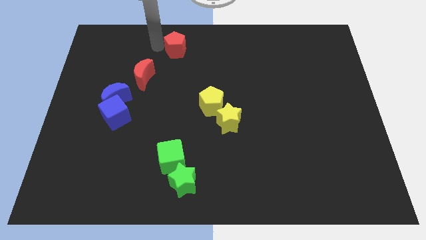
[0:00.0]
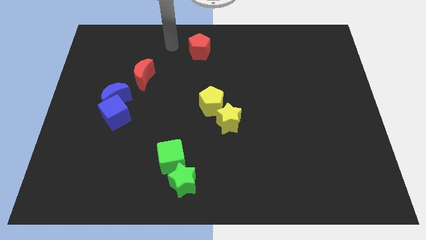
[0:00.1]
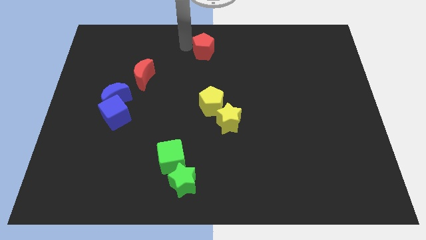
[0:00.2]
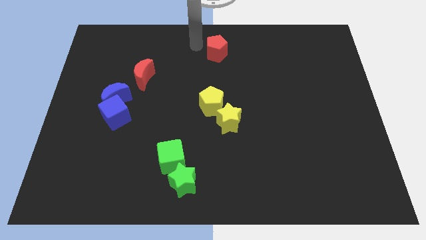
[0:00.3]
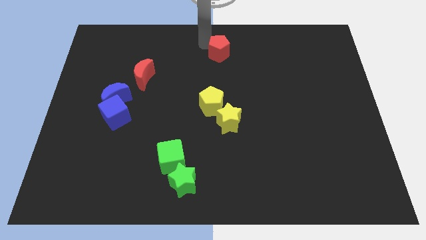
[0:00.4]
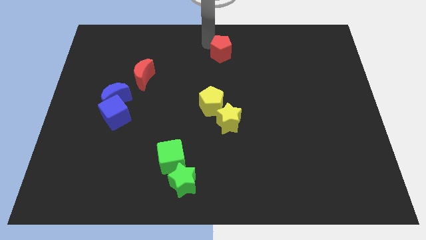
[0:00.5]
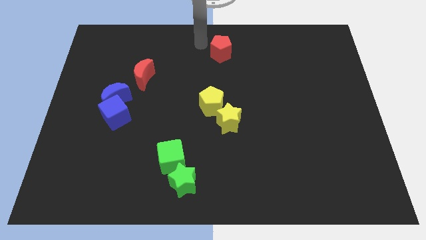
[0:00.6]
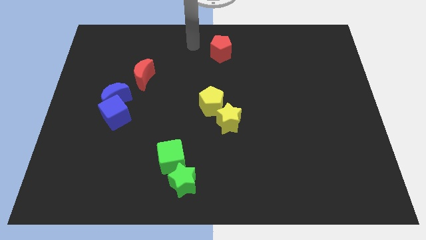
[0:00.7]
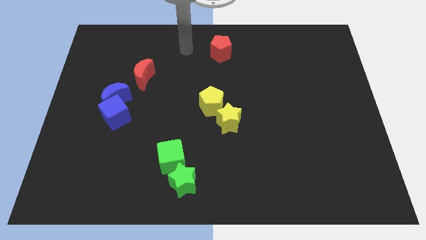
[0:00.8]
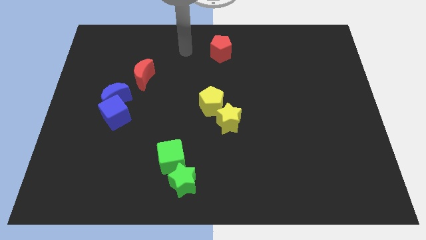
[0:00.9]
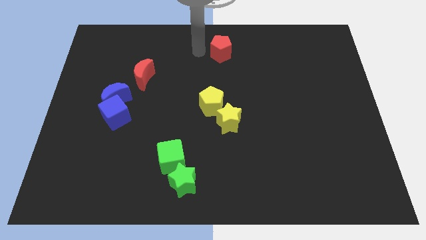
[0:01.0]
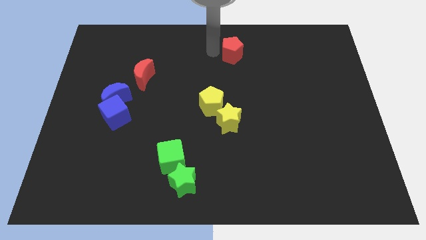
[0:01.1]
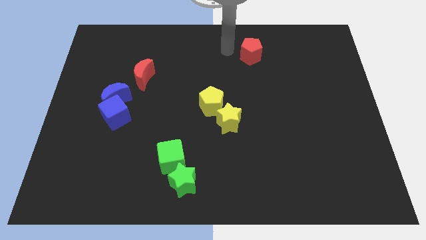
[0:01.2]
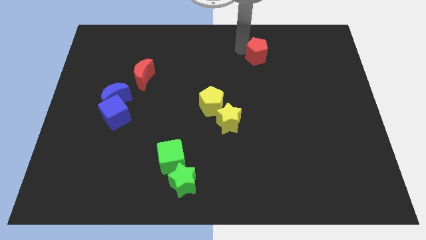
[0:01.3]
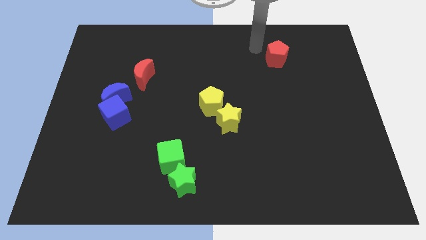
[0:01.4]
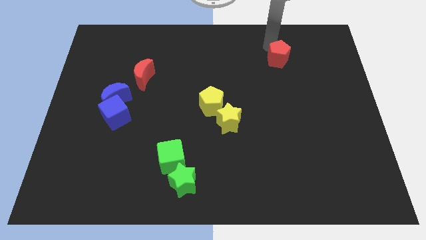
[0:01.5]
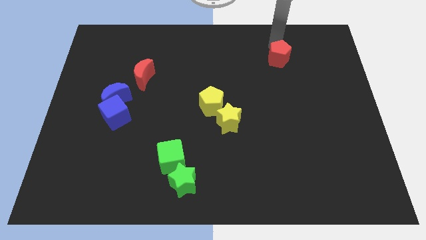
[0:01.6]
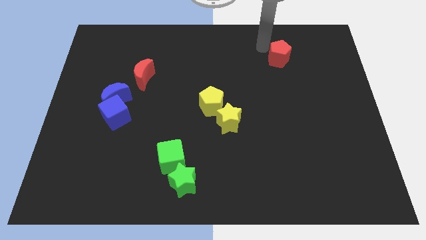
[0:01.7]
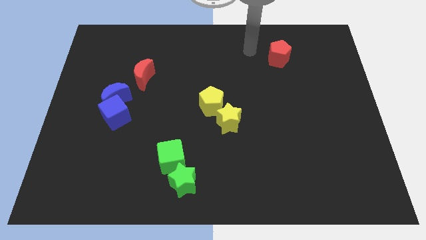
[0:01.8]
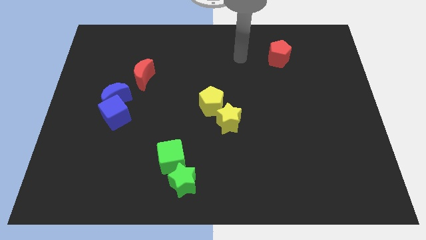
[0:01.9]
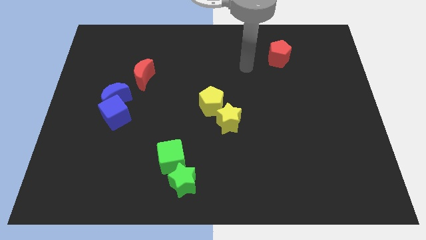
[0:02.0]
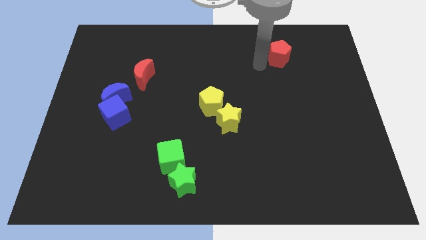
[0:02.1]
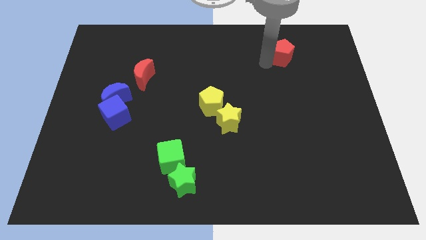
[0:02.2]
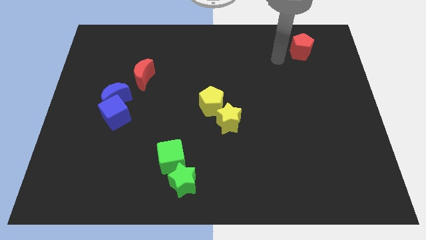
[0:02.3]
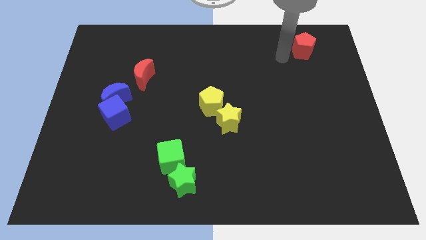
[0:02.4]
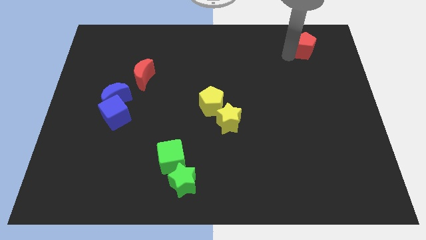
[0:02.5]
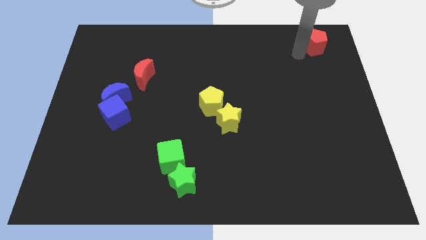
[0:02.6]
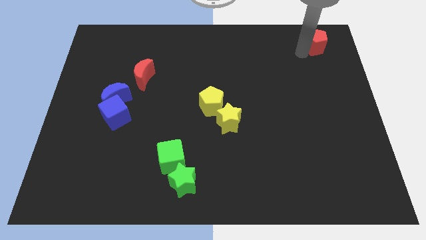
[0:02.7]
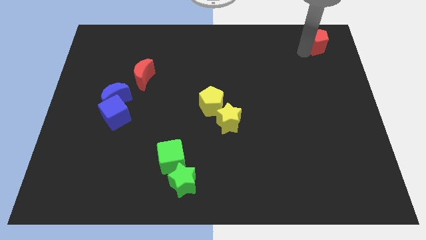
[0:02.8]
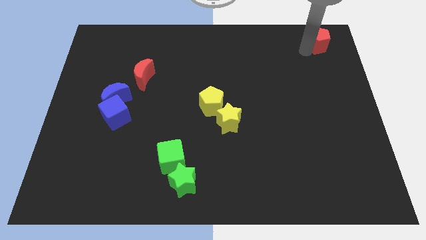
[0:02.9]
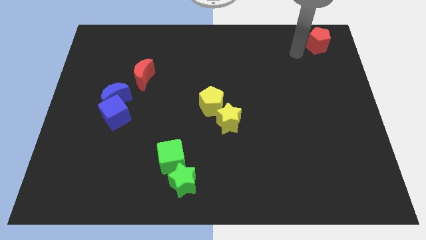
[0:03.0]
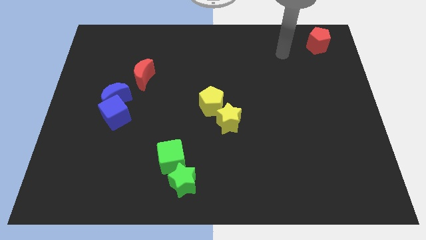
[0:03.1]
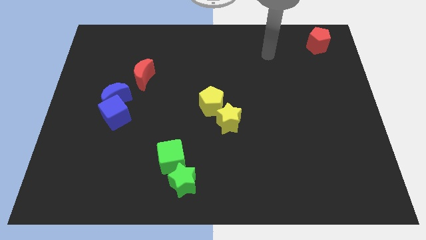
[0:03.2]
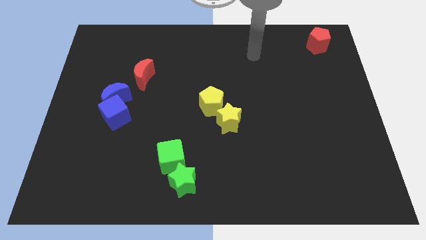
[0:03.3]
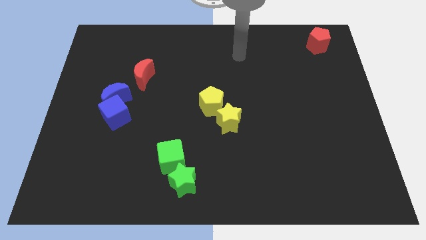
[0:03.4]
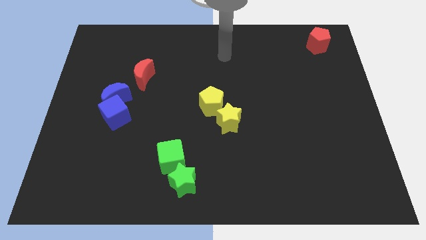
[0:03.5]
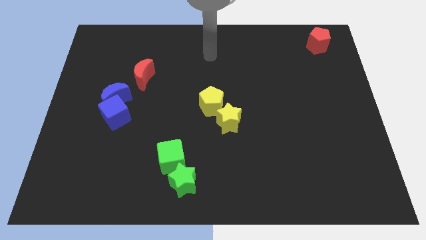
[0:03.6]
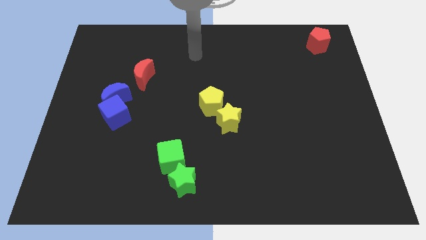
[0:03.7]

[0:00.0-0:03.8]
place the red pentagon at the top right corner of the board

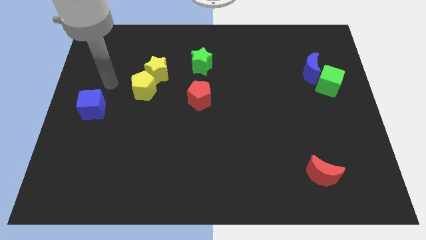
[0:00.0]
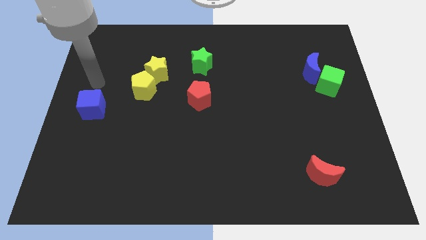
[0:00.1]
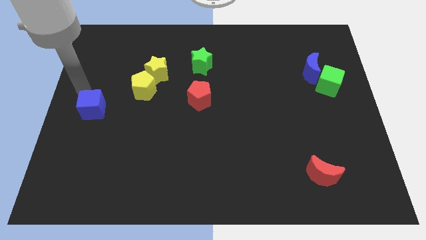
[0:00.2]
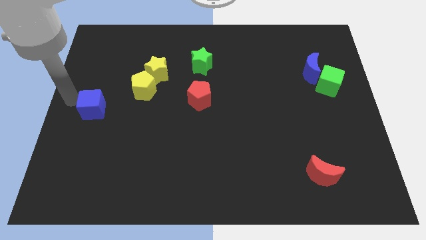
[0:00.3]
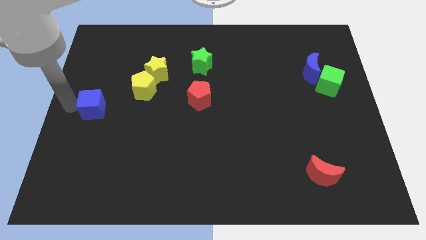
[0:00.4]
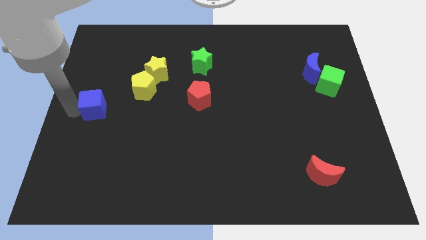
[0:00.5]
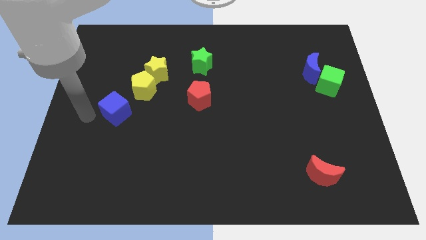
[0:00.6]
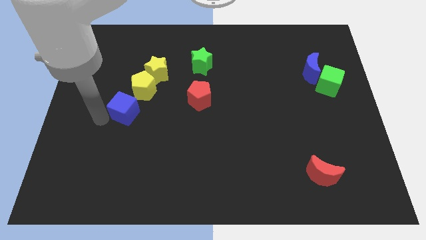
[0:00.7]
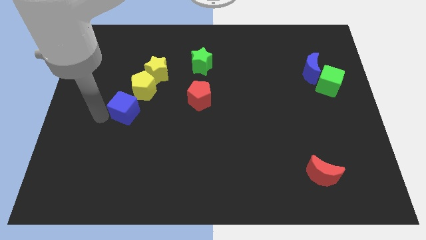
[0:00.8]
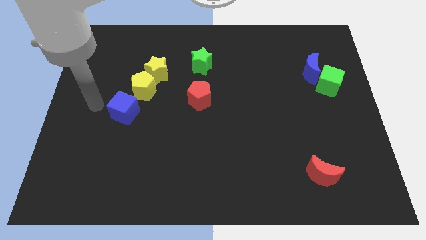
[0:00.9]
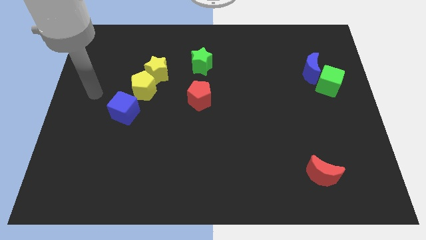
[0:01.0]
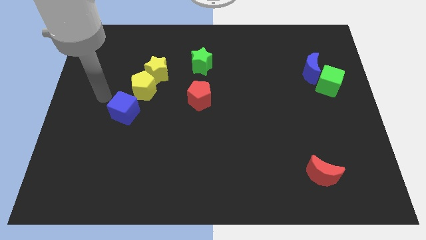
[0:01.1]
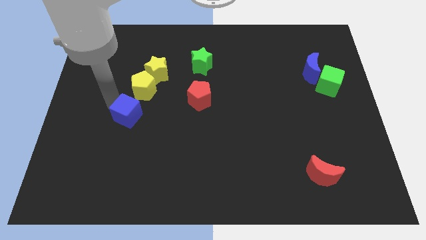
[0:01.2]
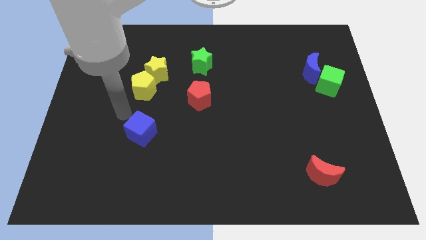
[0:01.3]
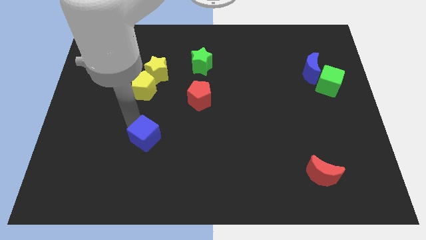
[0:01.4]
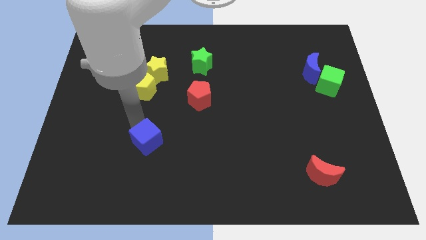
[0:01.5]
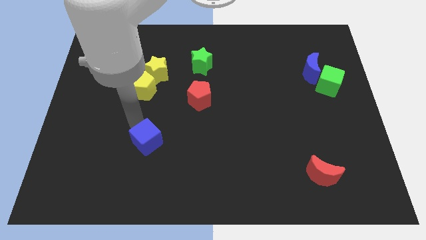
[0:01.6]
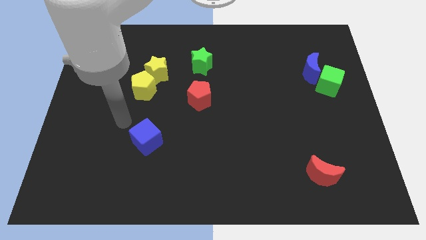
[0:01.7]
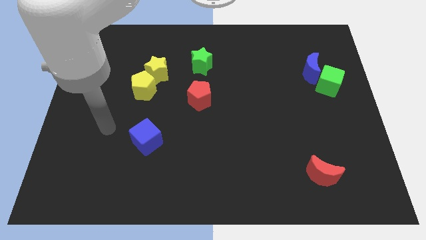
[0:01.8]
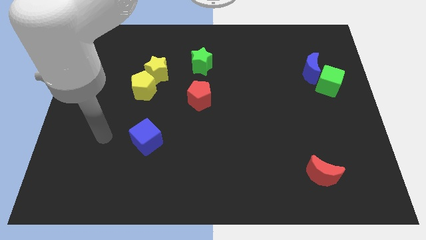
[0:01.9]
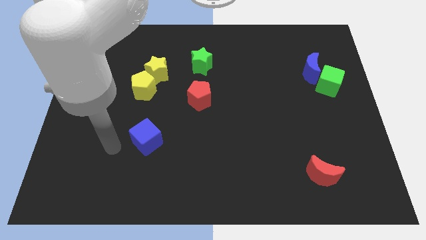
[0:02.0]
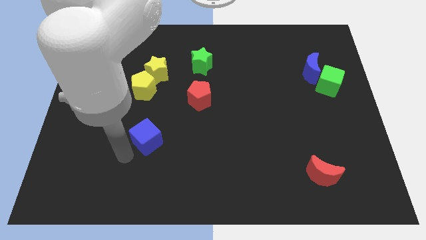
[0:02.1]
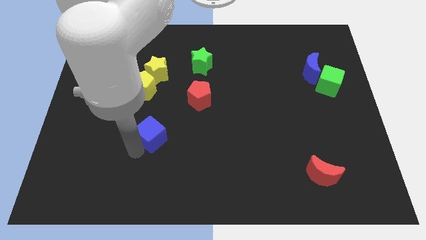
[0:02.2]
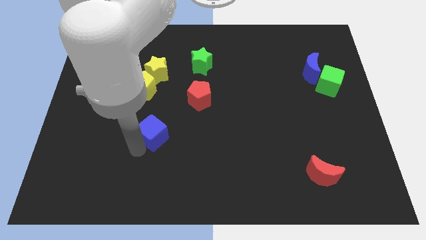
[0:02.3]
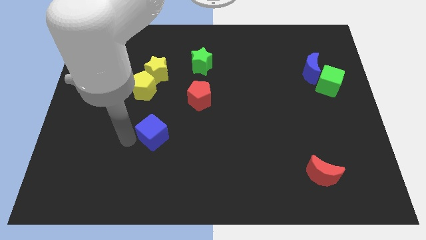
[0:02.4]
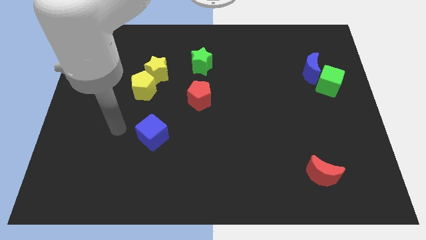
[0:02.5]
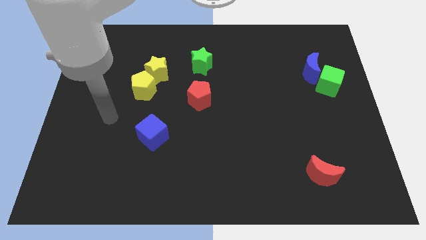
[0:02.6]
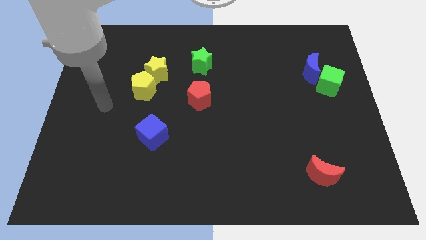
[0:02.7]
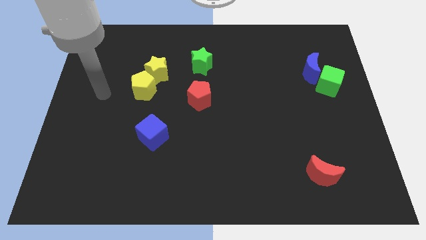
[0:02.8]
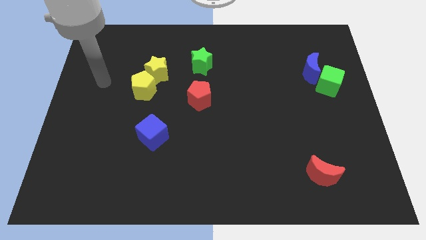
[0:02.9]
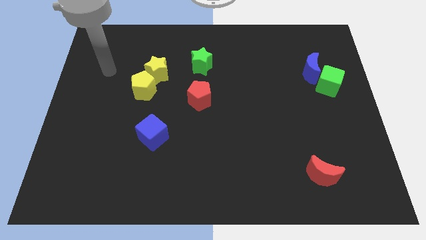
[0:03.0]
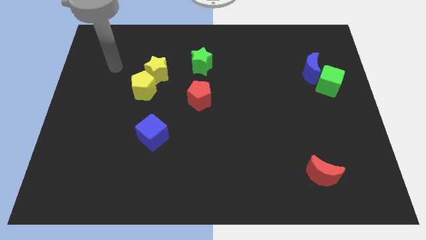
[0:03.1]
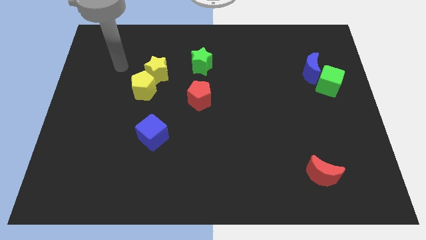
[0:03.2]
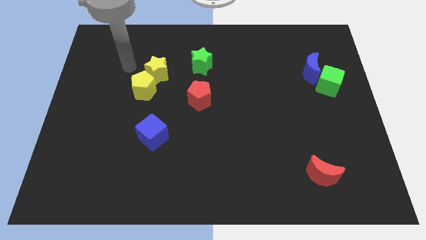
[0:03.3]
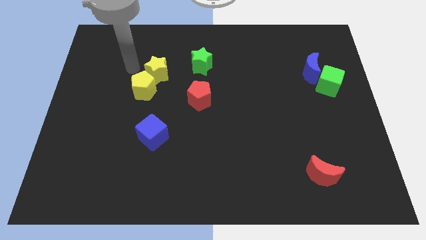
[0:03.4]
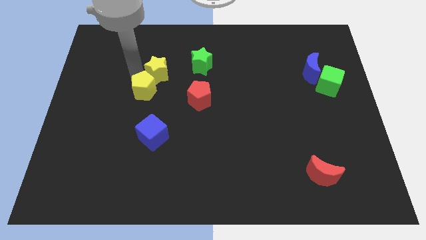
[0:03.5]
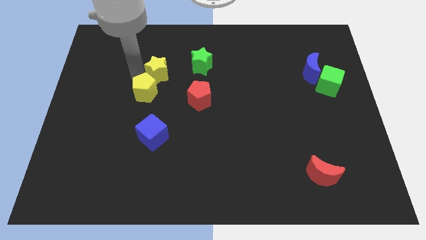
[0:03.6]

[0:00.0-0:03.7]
push the blue cube to the bottom of the yellow blocks

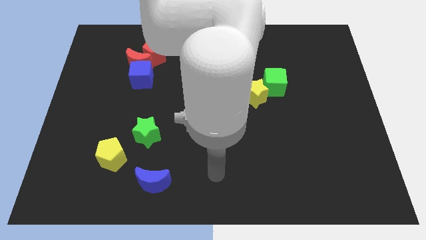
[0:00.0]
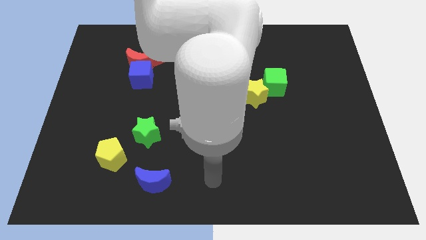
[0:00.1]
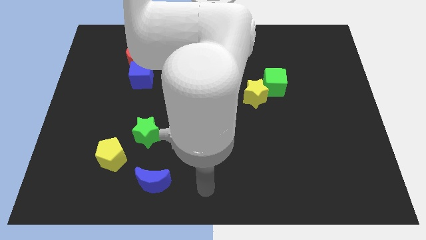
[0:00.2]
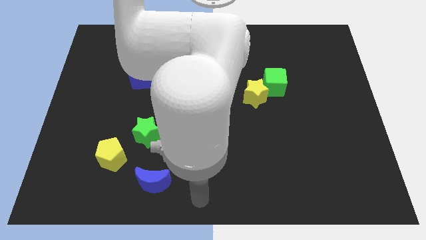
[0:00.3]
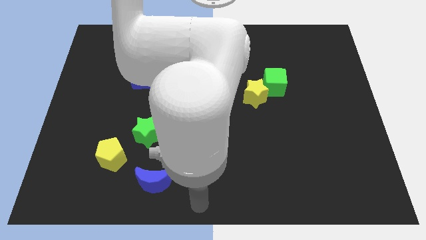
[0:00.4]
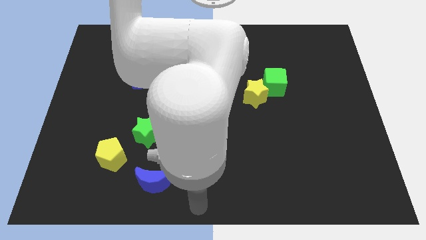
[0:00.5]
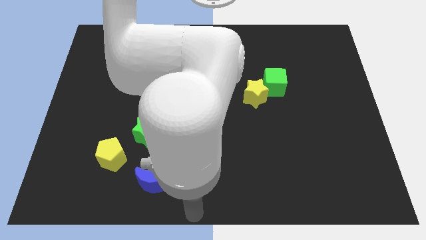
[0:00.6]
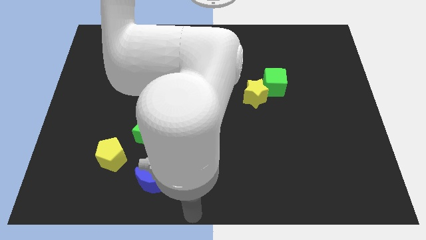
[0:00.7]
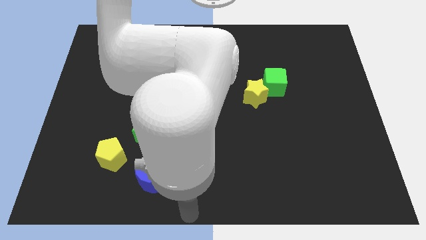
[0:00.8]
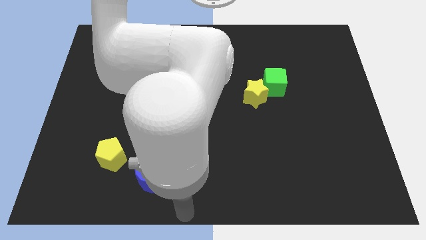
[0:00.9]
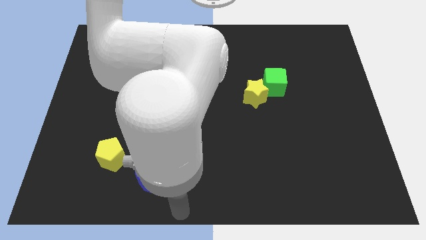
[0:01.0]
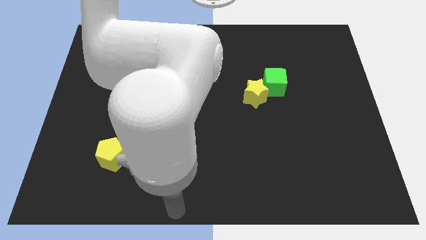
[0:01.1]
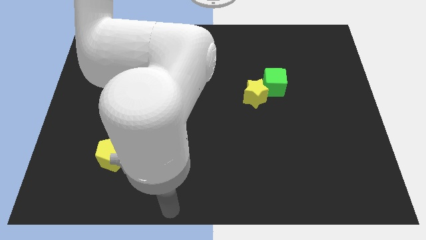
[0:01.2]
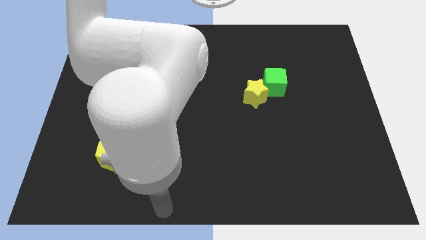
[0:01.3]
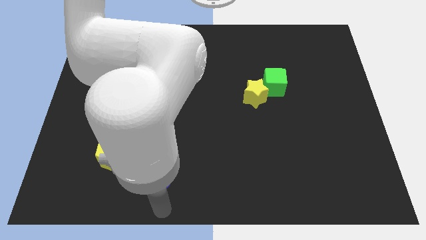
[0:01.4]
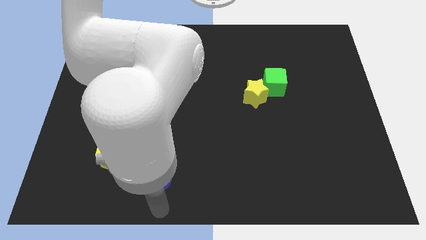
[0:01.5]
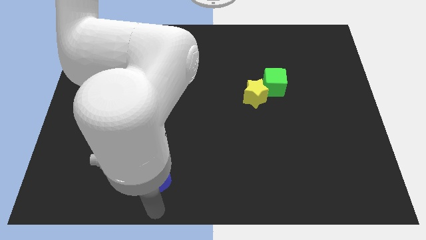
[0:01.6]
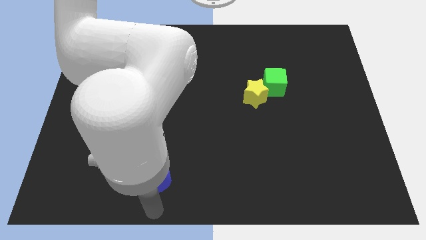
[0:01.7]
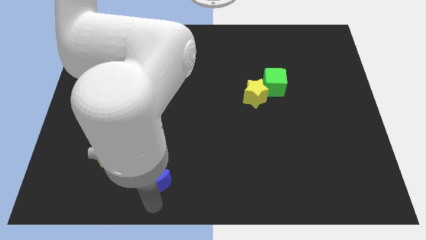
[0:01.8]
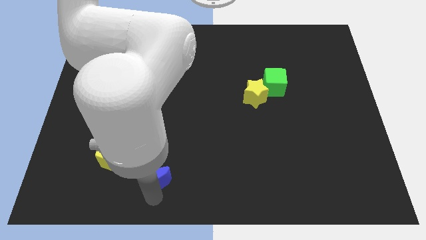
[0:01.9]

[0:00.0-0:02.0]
move your arm below the blue crescent
